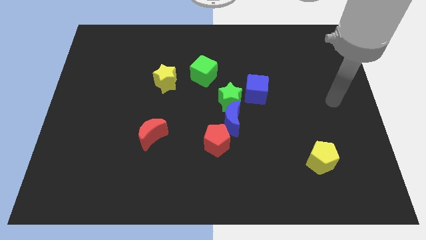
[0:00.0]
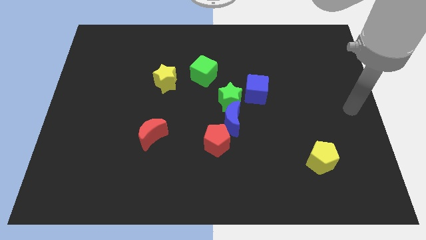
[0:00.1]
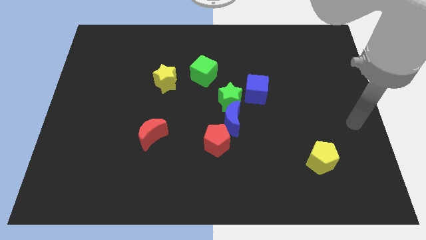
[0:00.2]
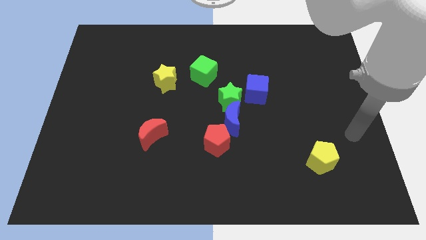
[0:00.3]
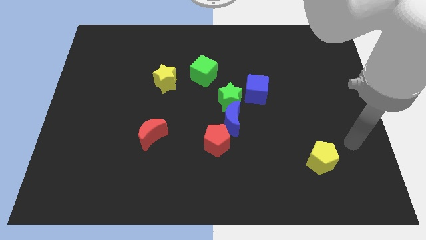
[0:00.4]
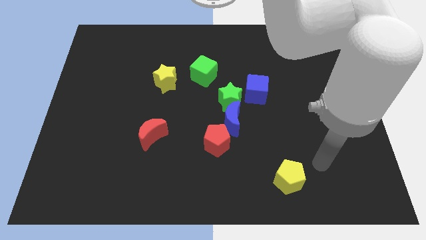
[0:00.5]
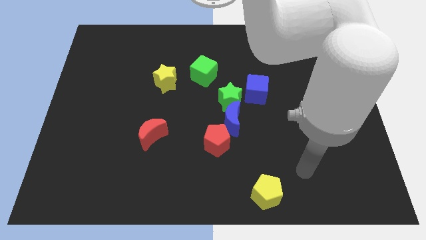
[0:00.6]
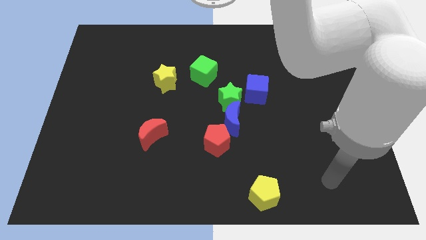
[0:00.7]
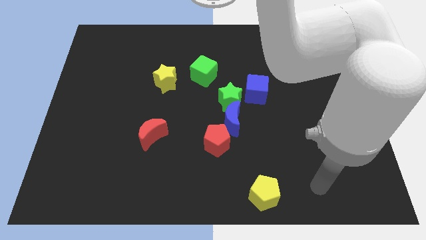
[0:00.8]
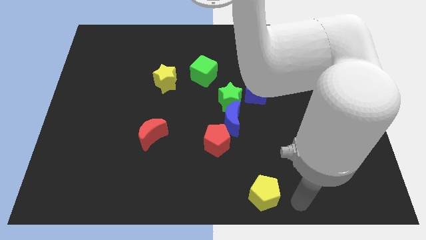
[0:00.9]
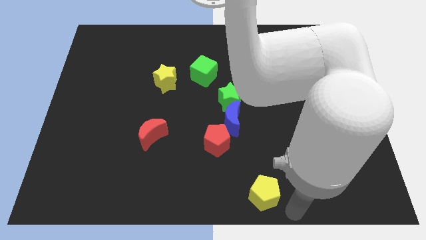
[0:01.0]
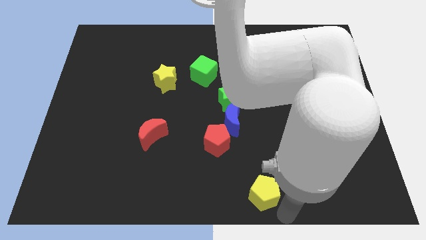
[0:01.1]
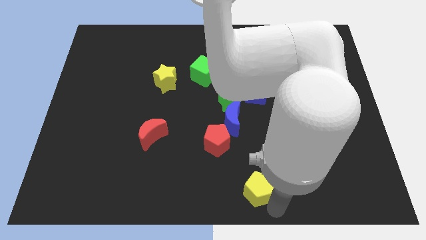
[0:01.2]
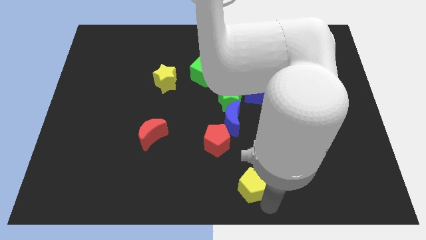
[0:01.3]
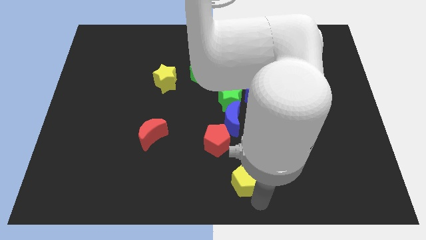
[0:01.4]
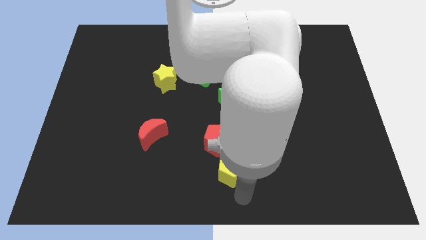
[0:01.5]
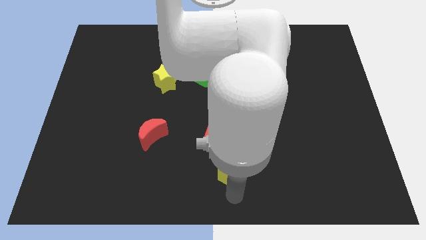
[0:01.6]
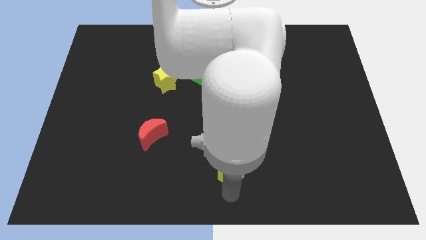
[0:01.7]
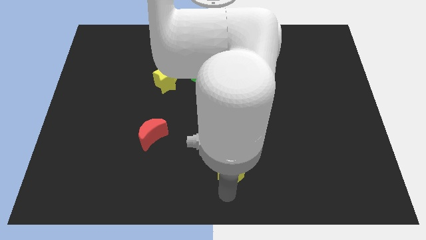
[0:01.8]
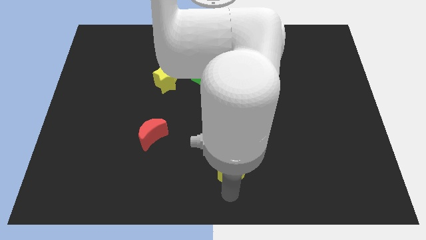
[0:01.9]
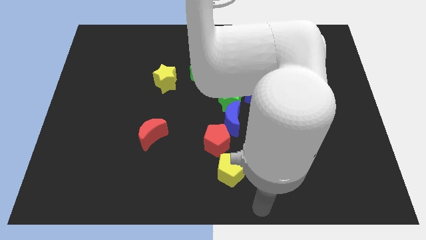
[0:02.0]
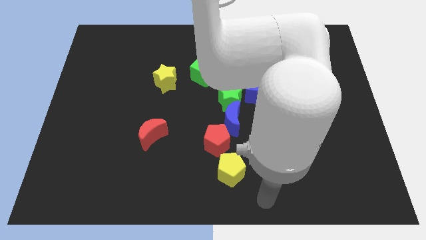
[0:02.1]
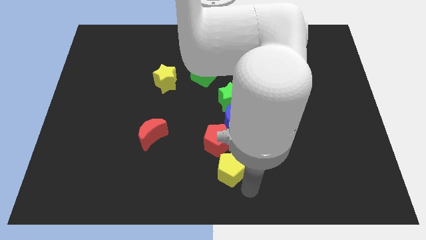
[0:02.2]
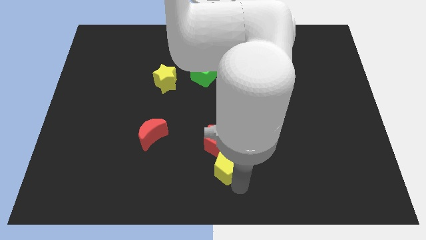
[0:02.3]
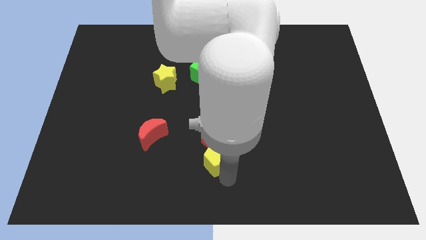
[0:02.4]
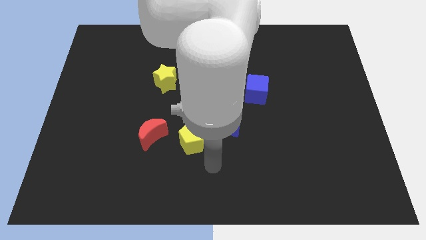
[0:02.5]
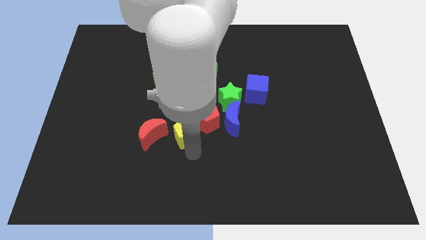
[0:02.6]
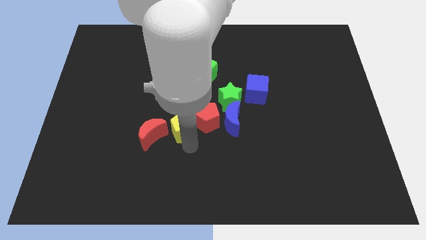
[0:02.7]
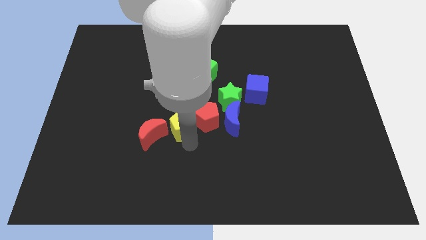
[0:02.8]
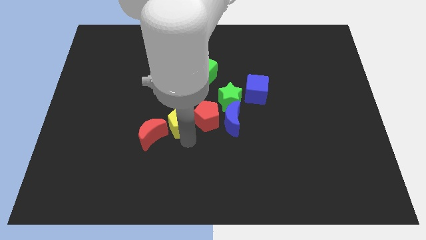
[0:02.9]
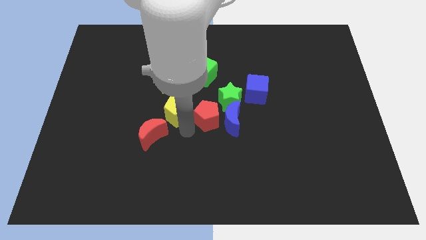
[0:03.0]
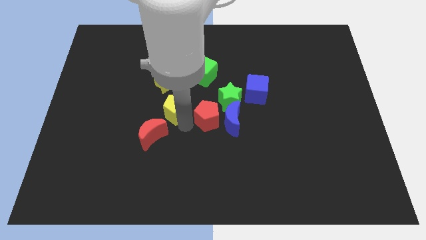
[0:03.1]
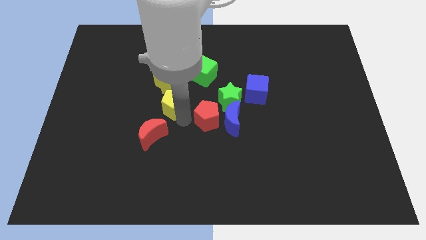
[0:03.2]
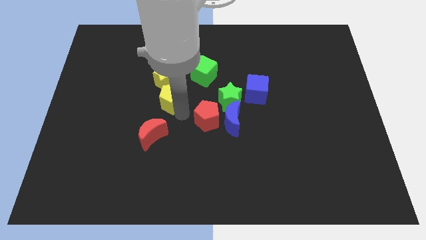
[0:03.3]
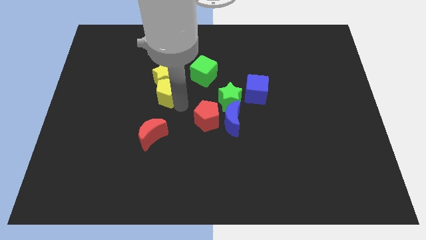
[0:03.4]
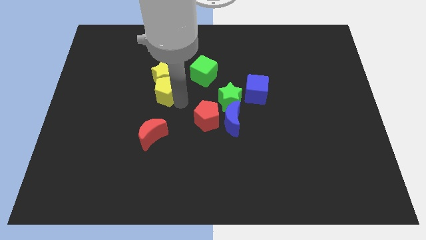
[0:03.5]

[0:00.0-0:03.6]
put the yellow pentagon towards the yellow star

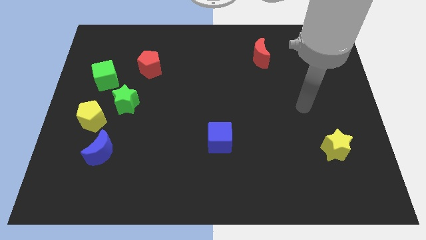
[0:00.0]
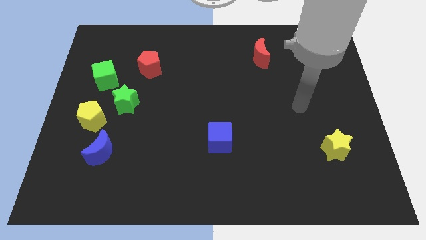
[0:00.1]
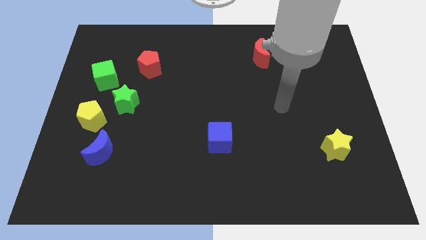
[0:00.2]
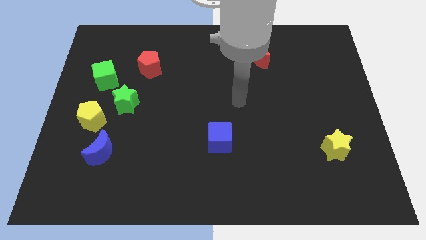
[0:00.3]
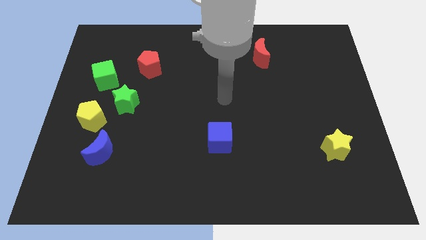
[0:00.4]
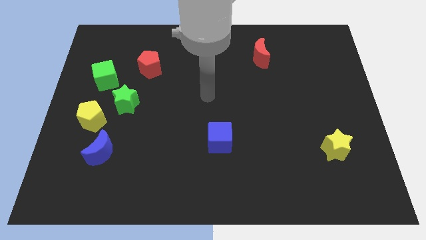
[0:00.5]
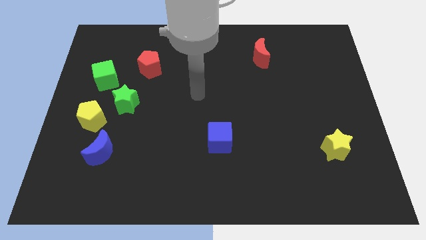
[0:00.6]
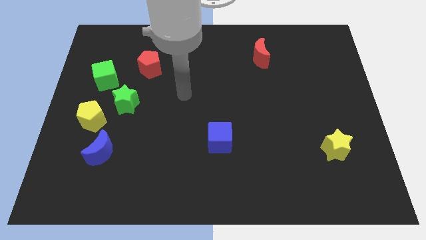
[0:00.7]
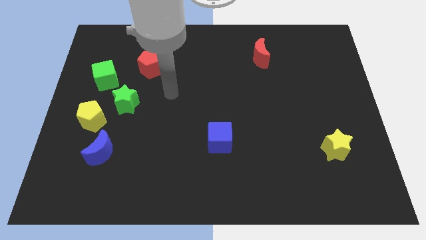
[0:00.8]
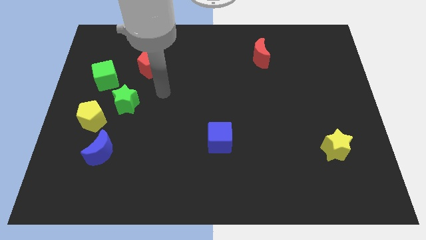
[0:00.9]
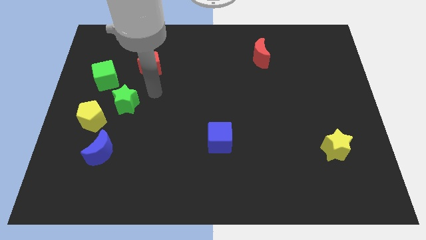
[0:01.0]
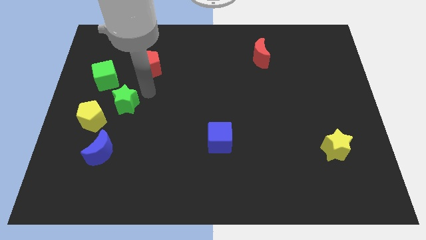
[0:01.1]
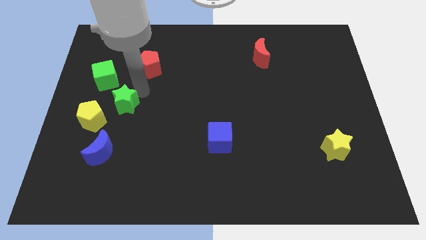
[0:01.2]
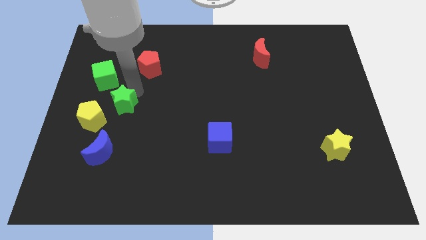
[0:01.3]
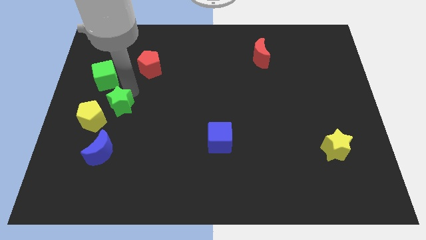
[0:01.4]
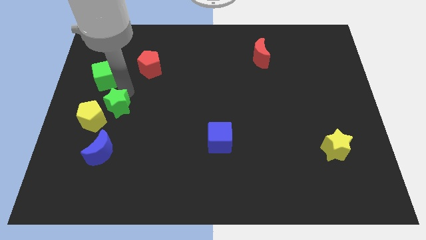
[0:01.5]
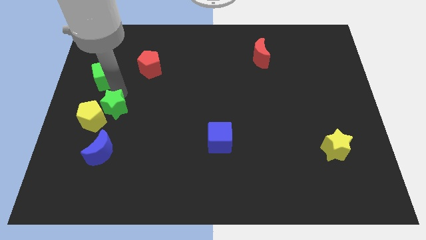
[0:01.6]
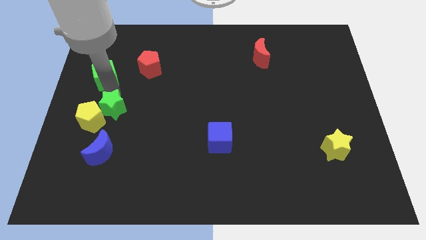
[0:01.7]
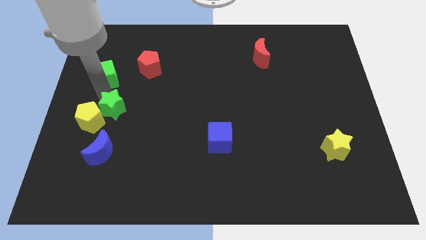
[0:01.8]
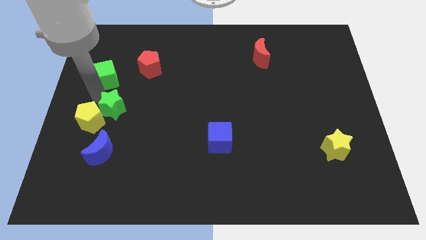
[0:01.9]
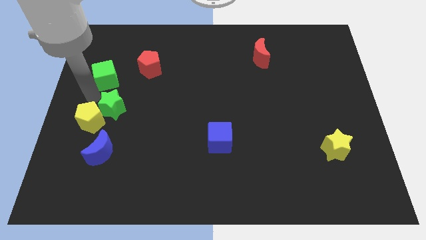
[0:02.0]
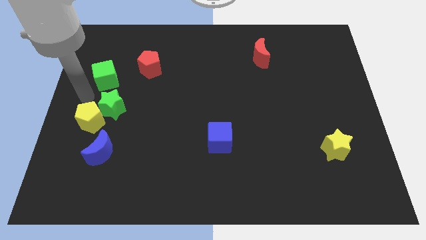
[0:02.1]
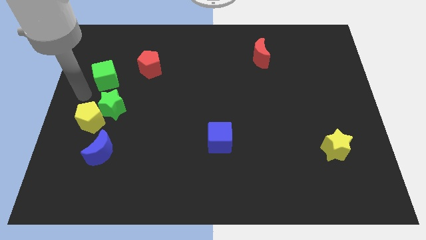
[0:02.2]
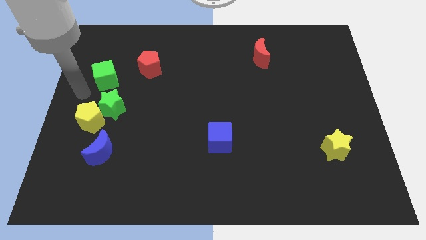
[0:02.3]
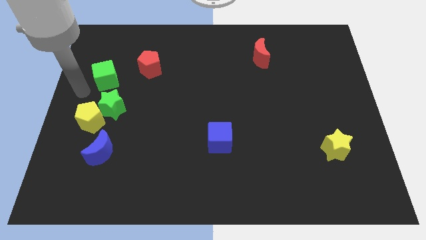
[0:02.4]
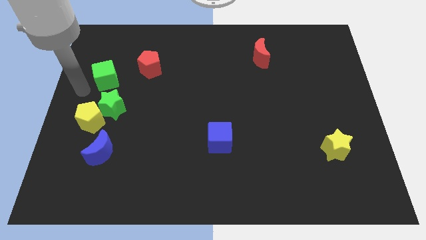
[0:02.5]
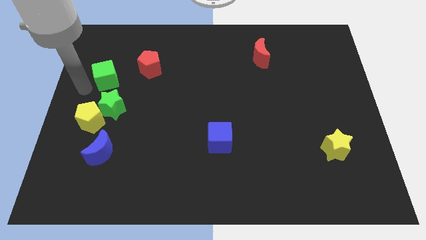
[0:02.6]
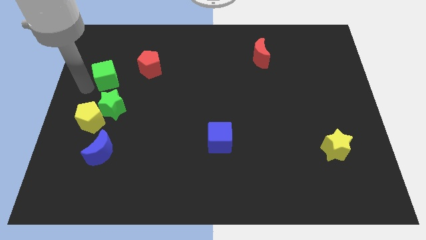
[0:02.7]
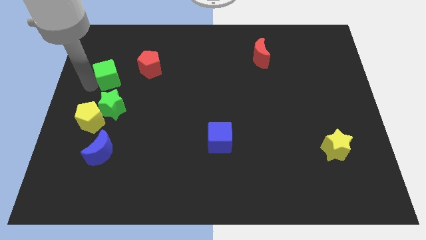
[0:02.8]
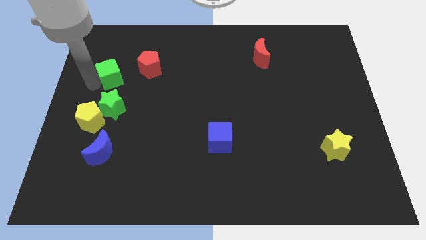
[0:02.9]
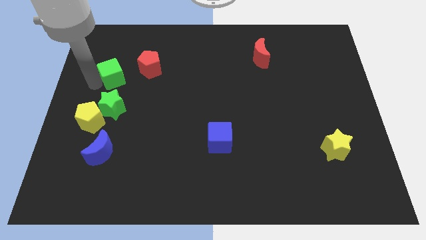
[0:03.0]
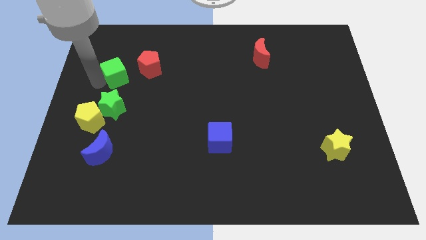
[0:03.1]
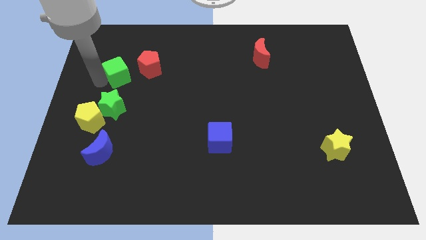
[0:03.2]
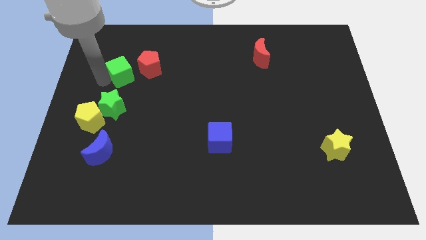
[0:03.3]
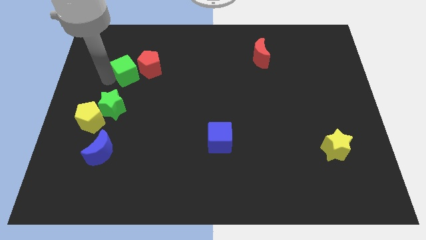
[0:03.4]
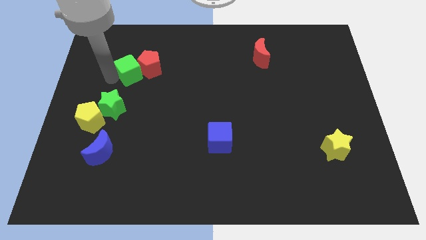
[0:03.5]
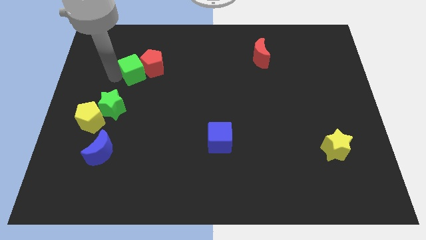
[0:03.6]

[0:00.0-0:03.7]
push the green cube next to the red pentagon

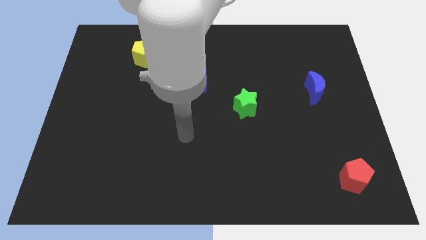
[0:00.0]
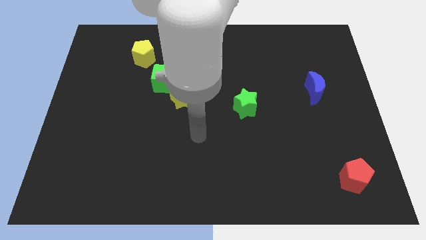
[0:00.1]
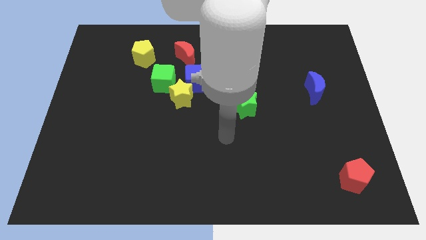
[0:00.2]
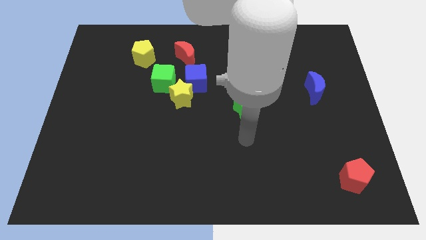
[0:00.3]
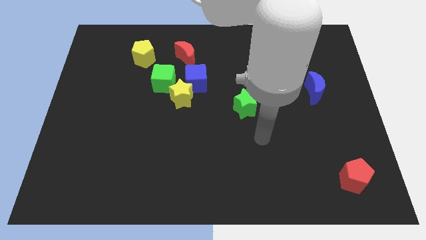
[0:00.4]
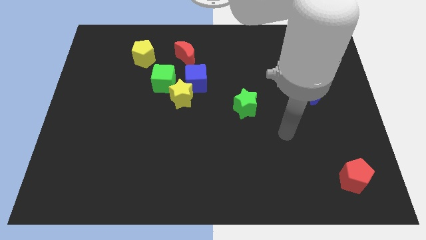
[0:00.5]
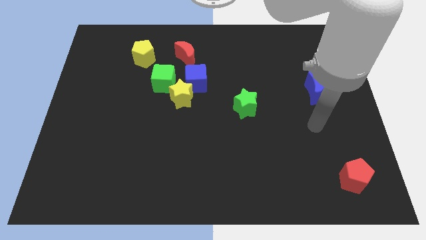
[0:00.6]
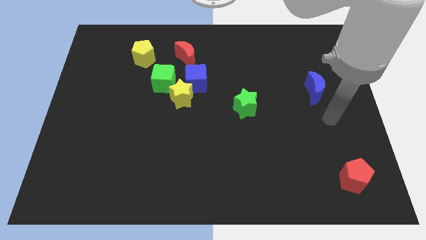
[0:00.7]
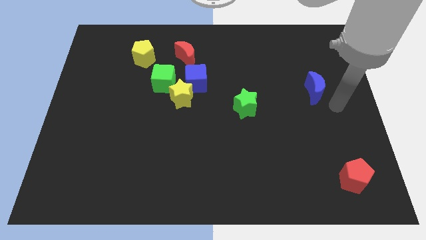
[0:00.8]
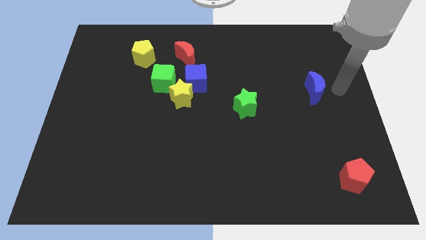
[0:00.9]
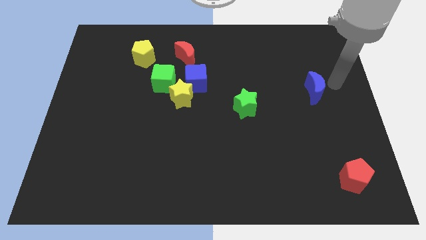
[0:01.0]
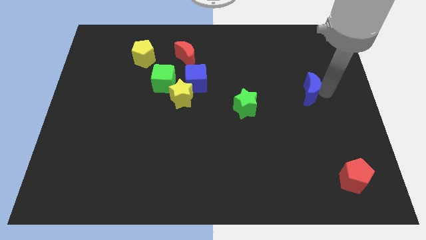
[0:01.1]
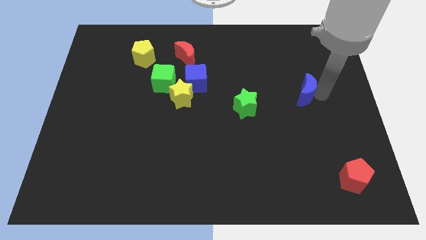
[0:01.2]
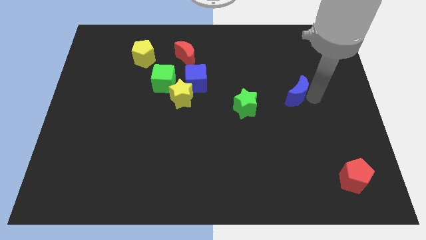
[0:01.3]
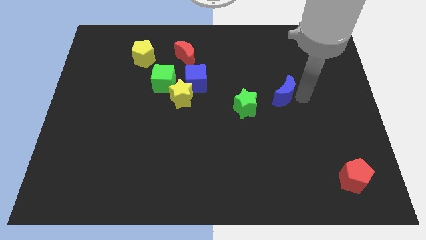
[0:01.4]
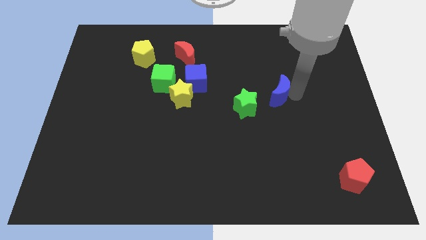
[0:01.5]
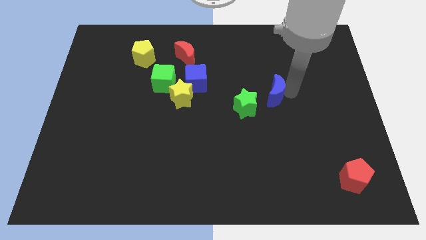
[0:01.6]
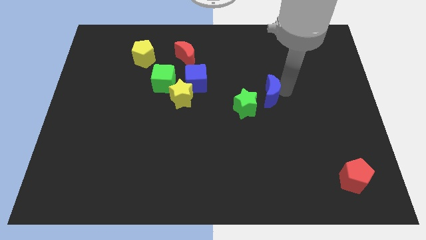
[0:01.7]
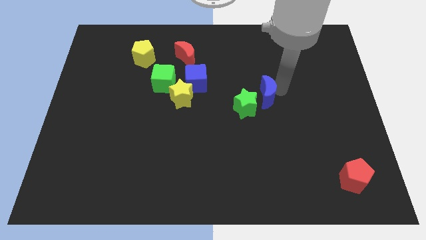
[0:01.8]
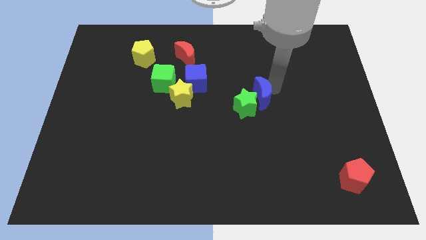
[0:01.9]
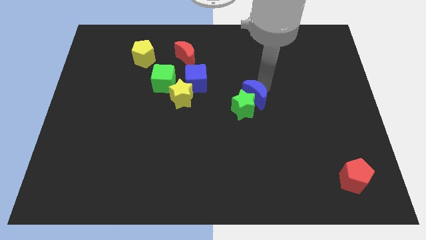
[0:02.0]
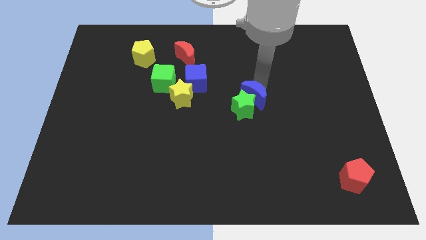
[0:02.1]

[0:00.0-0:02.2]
slide the blue moon close to the green star
